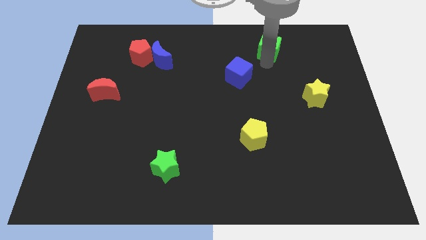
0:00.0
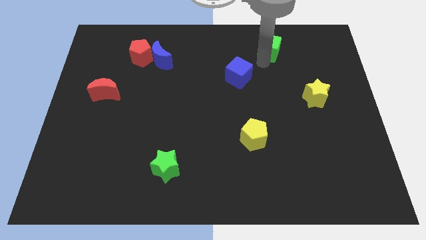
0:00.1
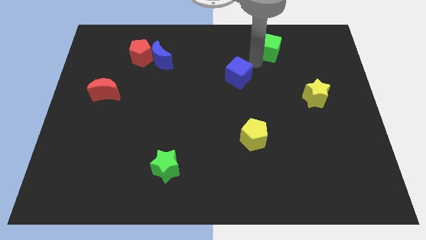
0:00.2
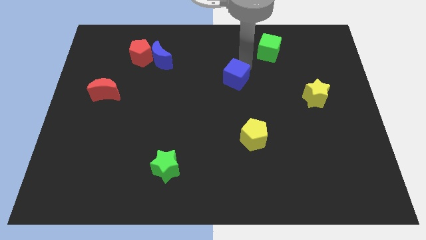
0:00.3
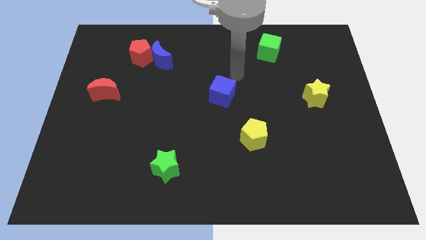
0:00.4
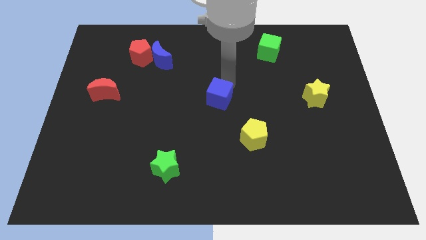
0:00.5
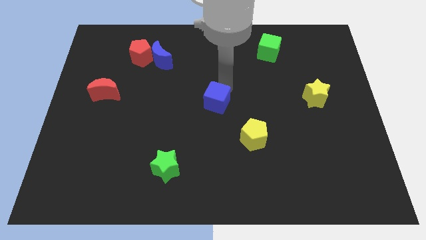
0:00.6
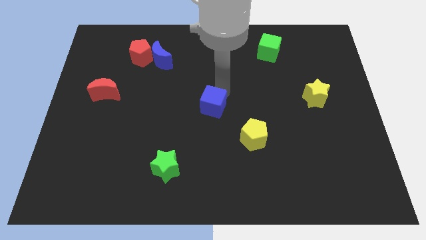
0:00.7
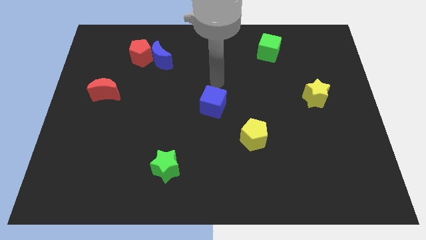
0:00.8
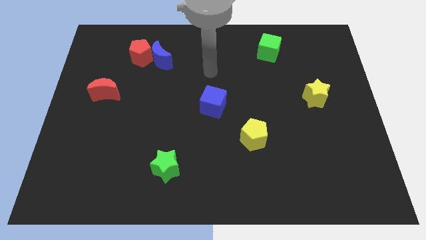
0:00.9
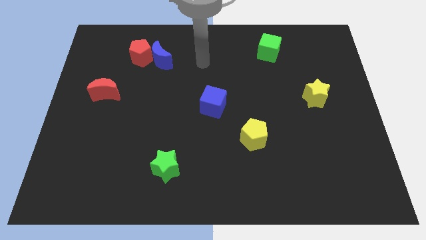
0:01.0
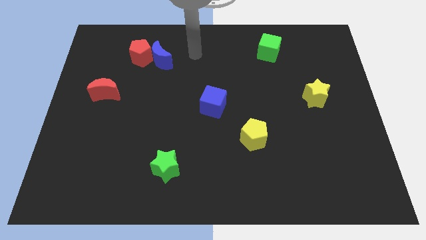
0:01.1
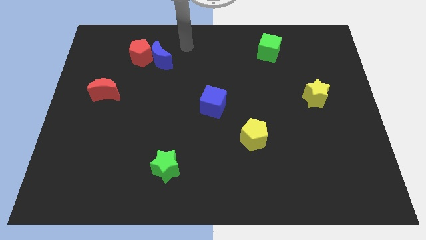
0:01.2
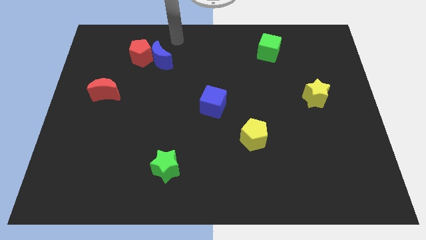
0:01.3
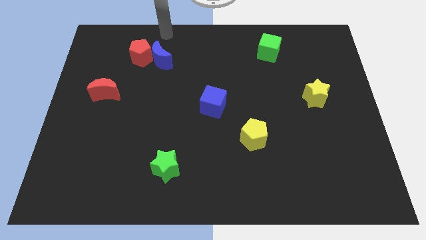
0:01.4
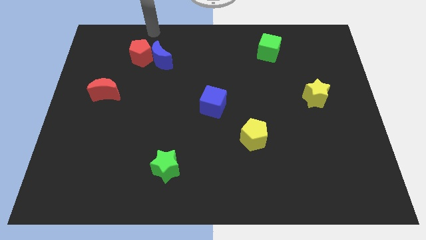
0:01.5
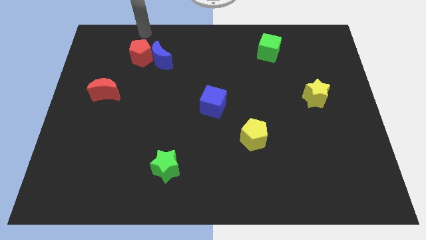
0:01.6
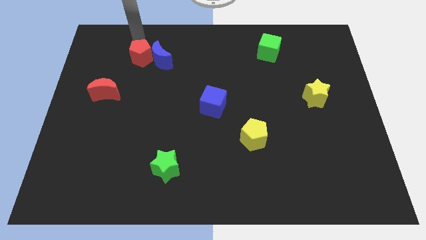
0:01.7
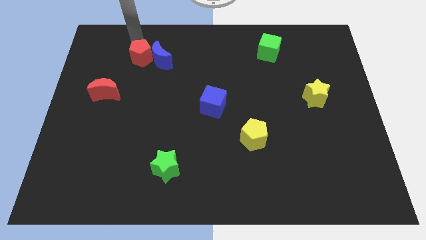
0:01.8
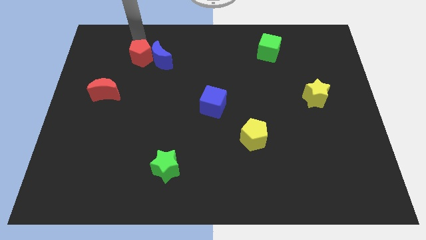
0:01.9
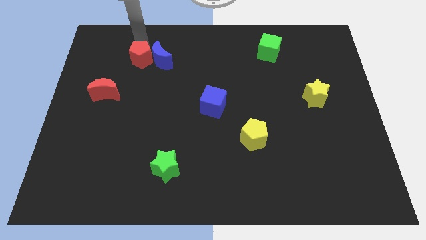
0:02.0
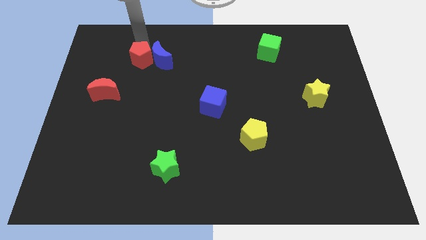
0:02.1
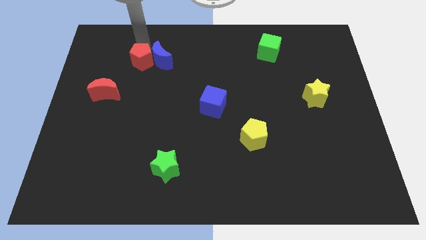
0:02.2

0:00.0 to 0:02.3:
put the blue cube at the center of the board

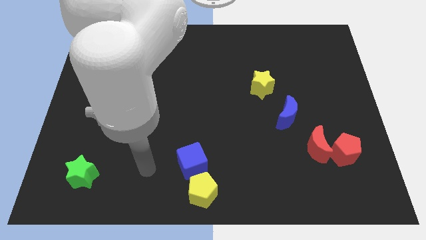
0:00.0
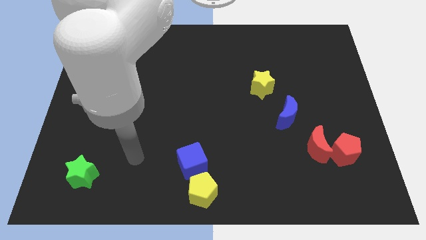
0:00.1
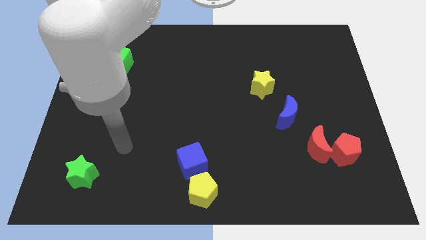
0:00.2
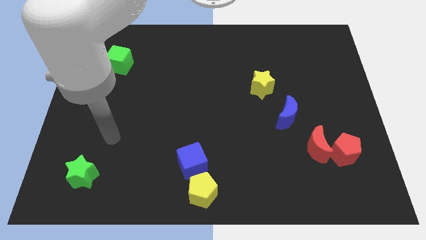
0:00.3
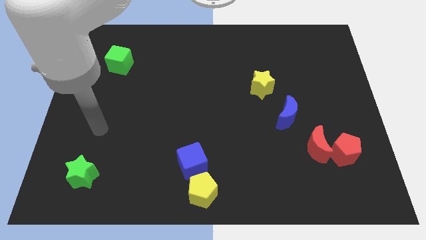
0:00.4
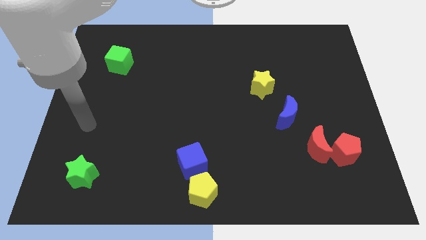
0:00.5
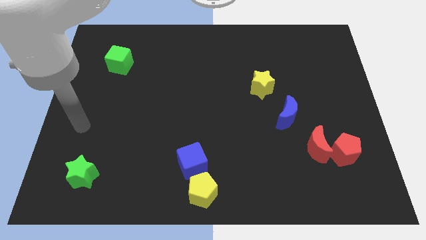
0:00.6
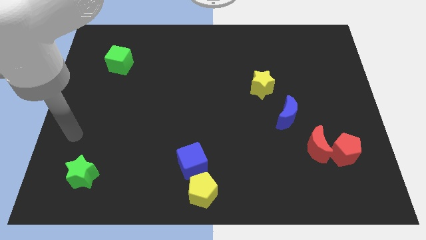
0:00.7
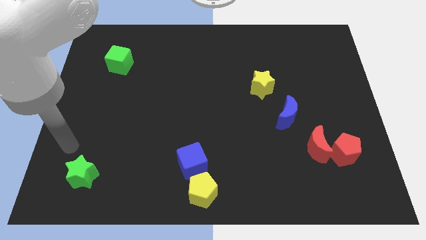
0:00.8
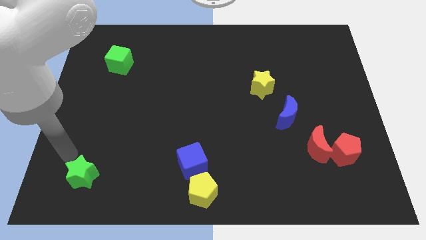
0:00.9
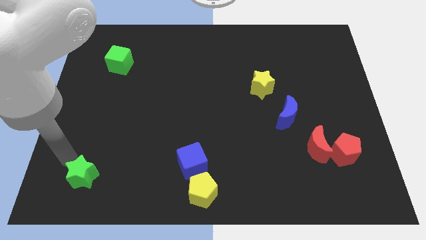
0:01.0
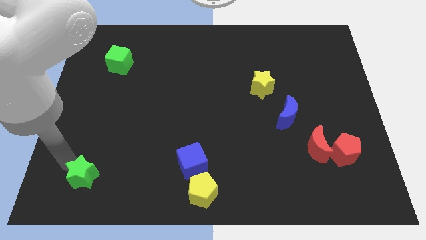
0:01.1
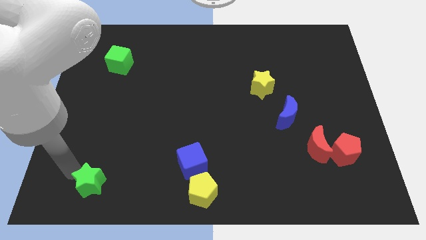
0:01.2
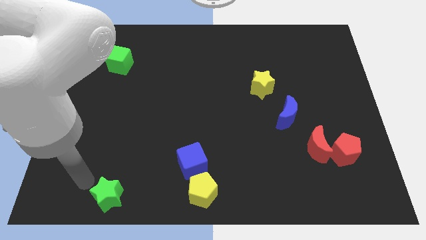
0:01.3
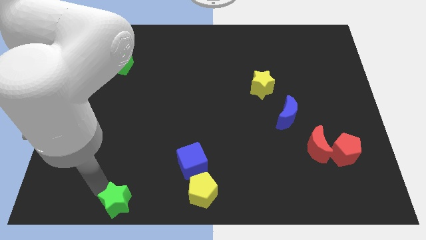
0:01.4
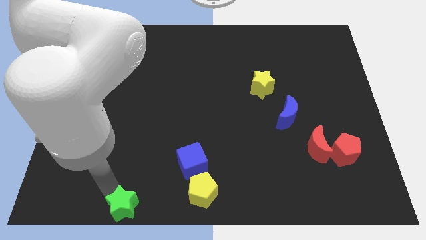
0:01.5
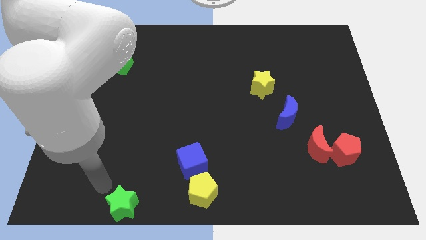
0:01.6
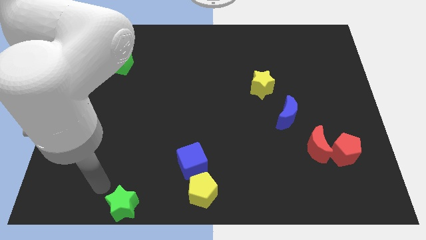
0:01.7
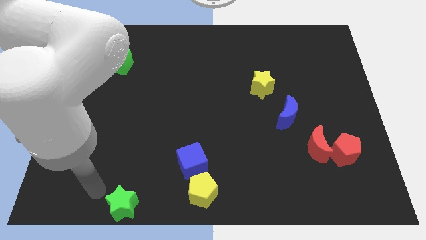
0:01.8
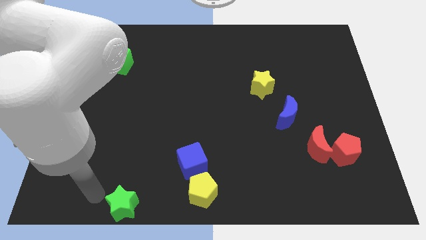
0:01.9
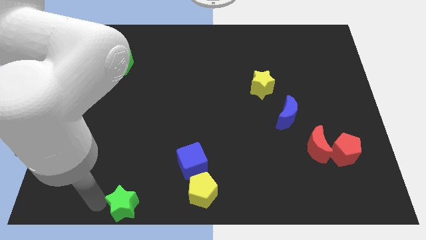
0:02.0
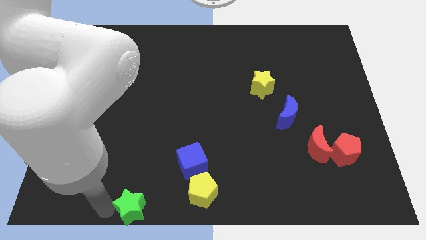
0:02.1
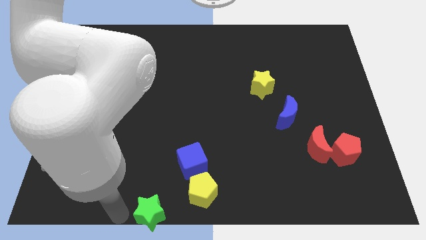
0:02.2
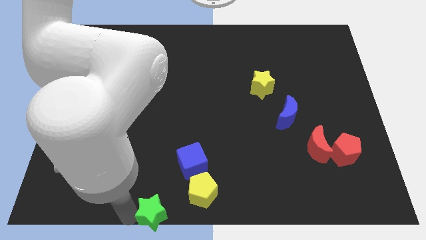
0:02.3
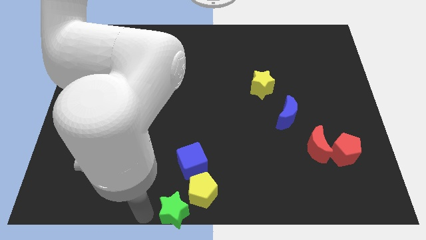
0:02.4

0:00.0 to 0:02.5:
move the green star close to the yellow pentagon

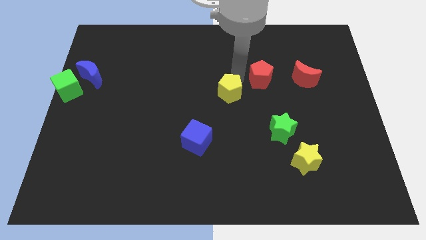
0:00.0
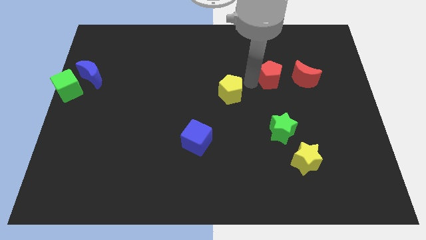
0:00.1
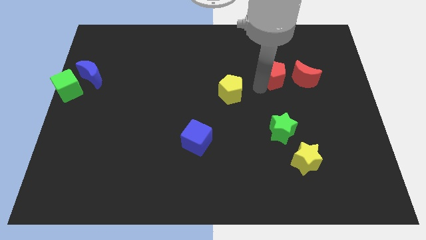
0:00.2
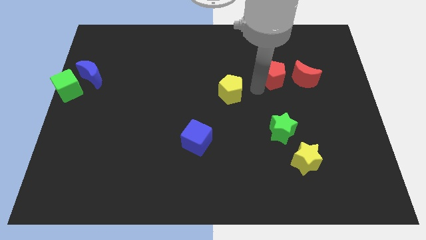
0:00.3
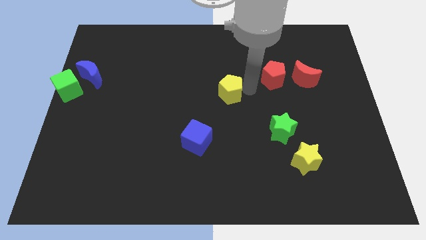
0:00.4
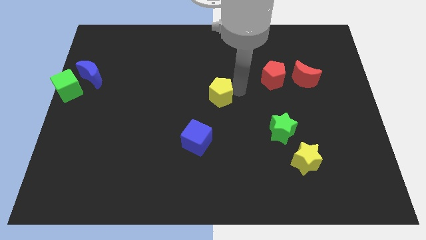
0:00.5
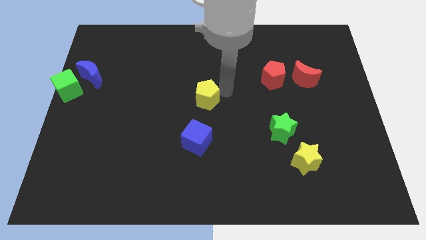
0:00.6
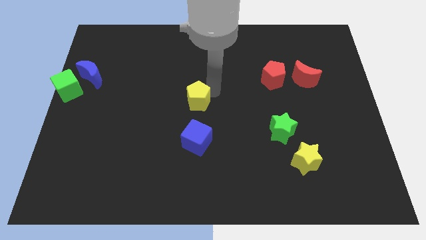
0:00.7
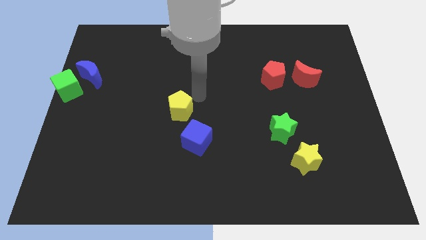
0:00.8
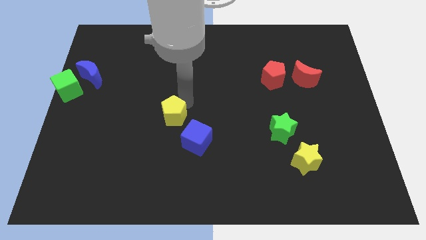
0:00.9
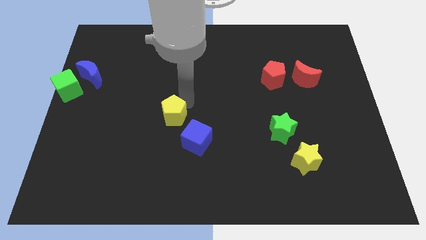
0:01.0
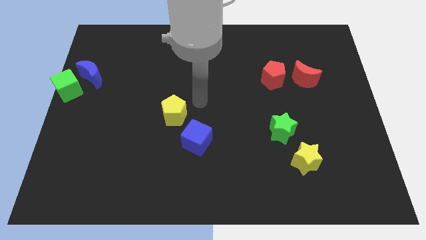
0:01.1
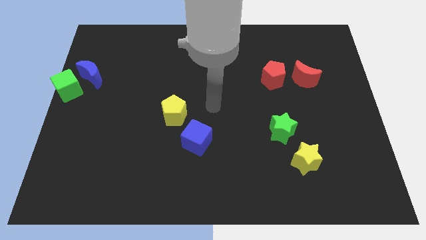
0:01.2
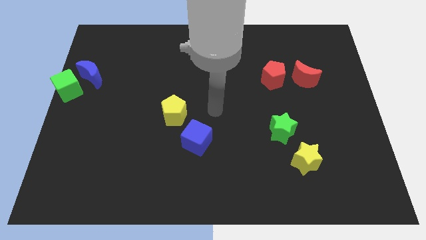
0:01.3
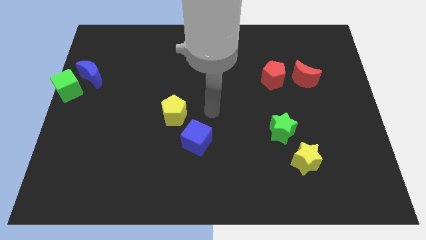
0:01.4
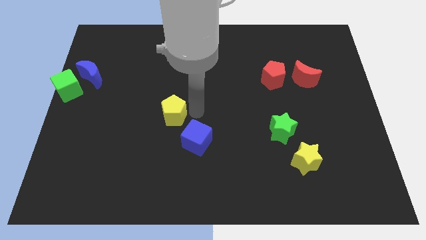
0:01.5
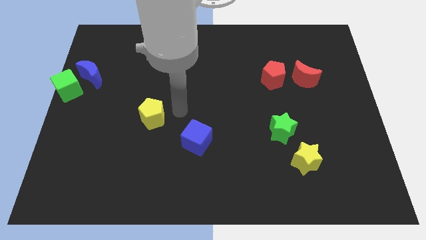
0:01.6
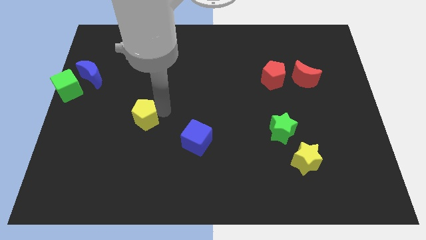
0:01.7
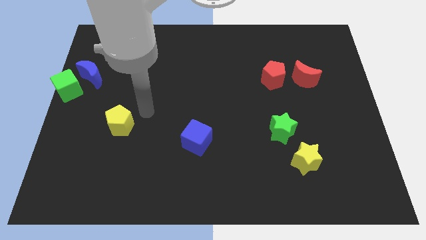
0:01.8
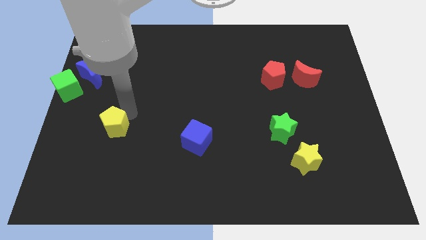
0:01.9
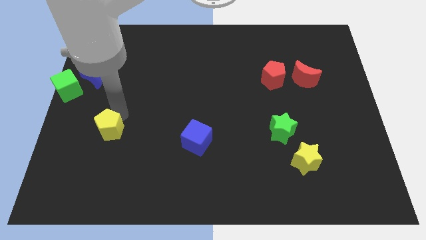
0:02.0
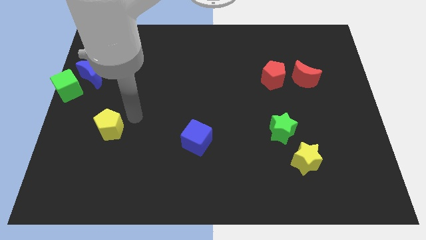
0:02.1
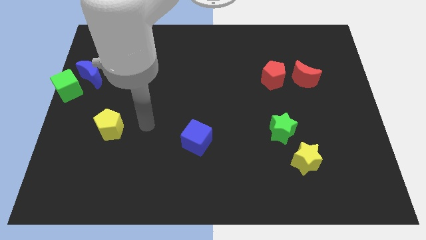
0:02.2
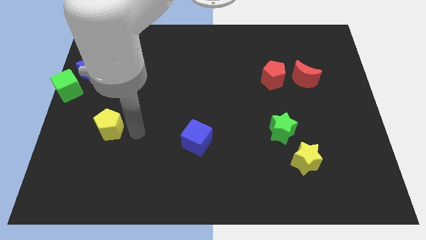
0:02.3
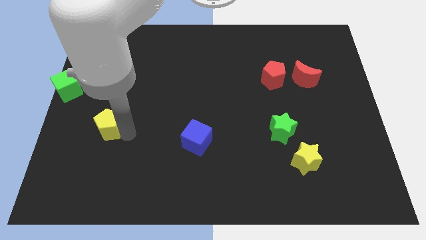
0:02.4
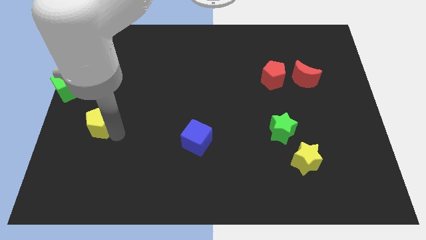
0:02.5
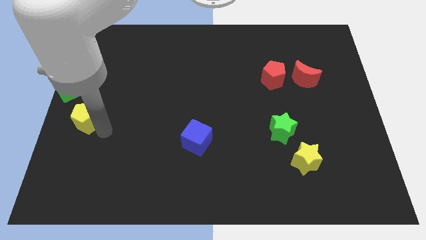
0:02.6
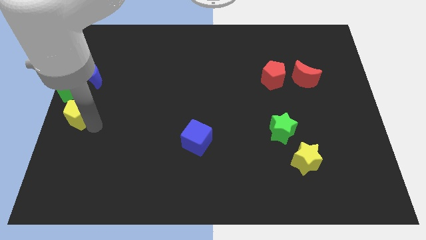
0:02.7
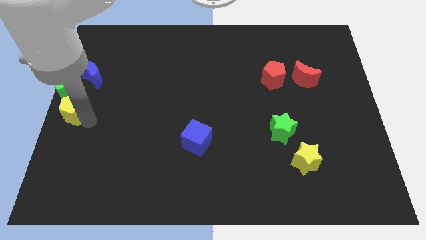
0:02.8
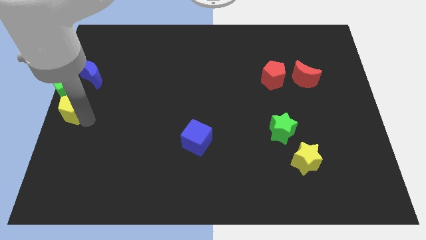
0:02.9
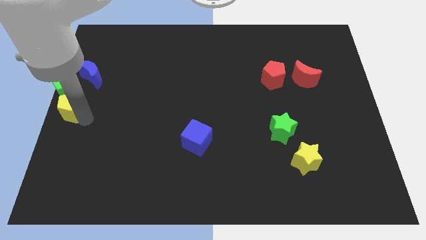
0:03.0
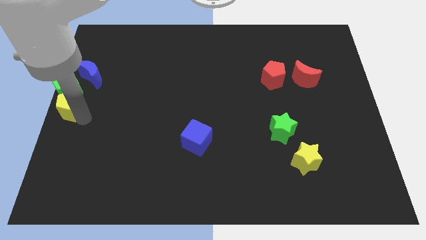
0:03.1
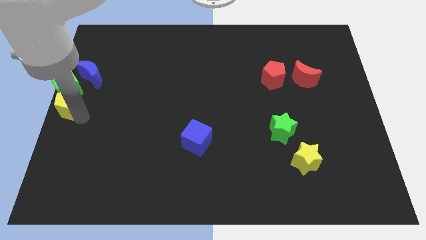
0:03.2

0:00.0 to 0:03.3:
move the yellow pentagon below the green cube

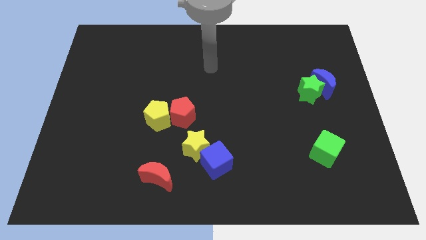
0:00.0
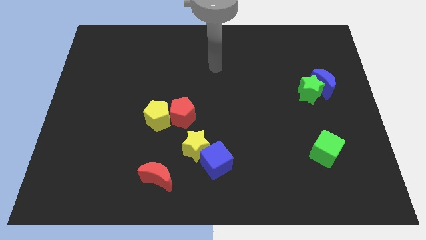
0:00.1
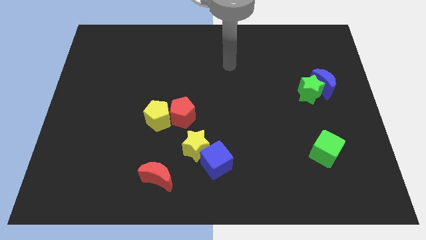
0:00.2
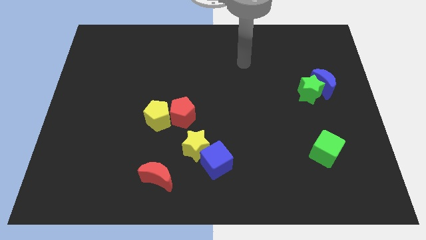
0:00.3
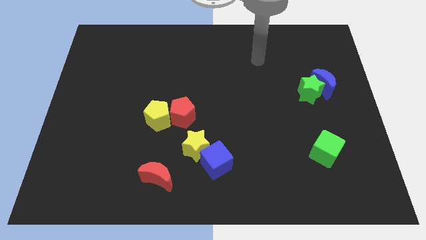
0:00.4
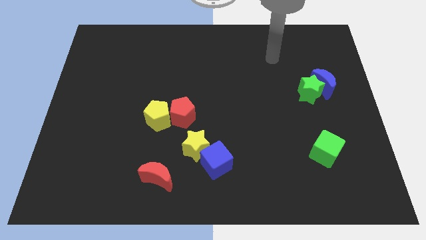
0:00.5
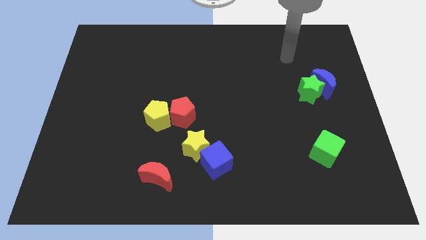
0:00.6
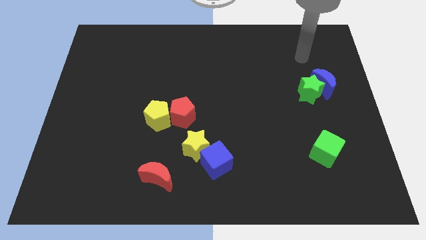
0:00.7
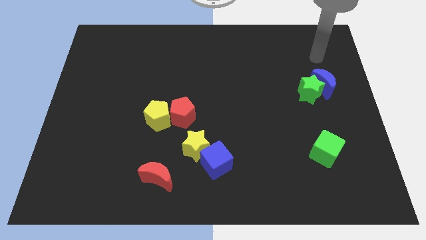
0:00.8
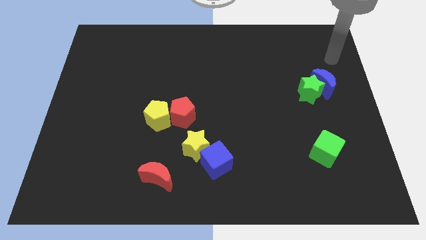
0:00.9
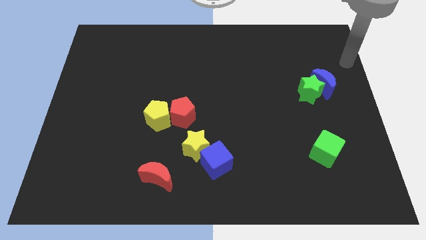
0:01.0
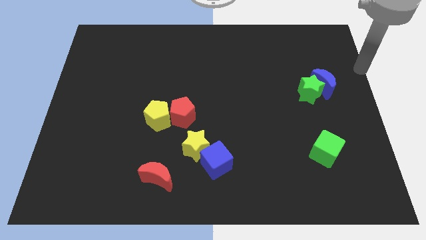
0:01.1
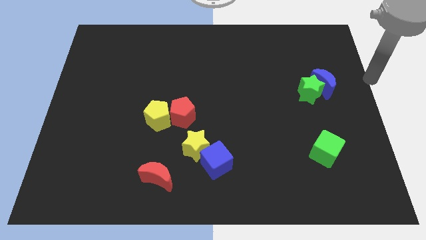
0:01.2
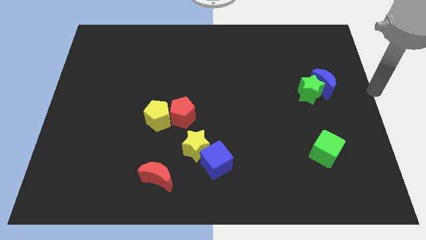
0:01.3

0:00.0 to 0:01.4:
point your arm at the center right of the board
